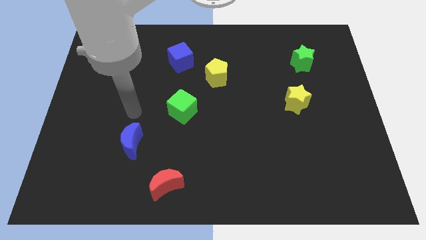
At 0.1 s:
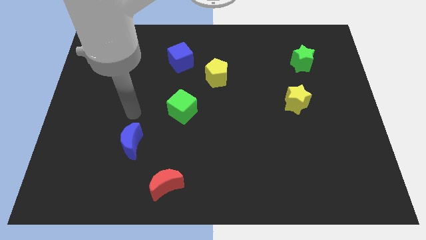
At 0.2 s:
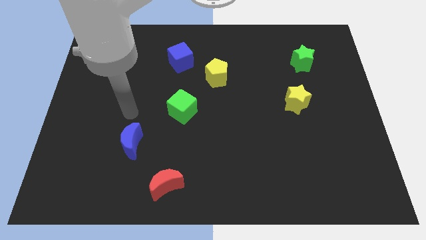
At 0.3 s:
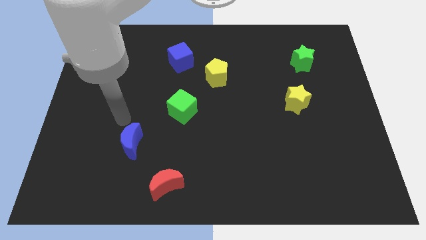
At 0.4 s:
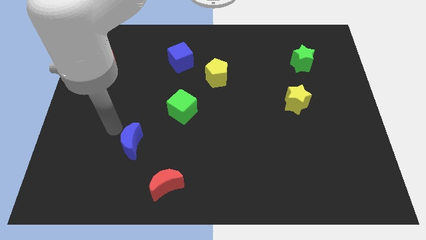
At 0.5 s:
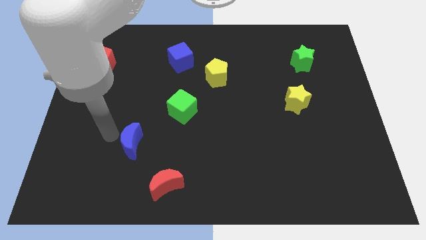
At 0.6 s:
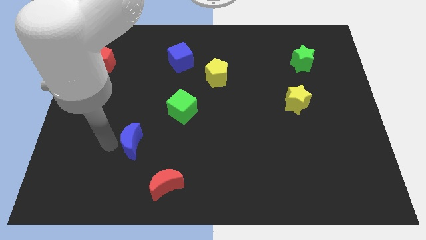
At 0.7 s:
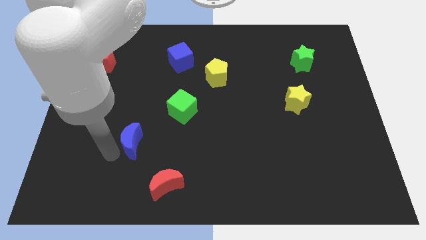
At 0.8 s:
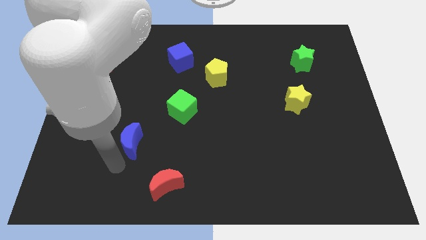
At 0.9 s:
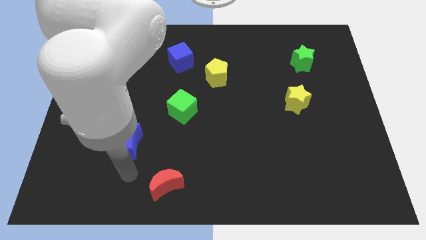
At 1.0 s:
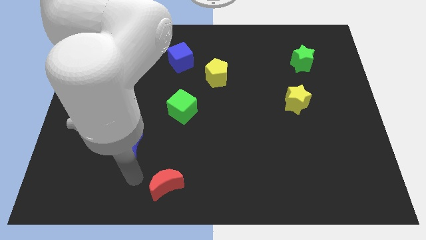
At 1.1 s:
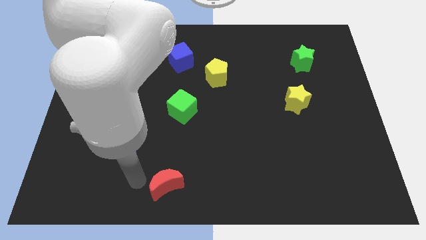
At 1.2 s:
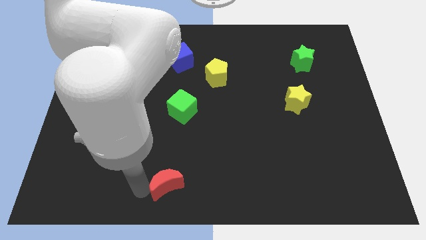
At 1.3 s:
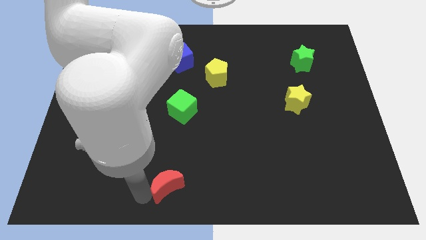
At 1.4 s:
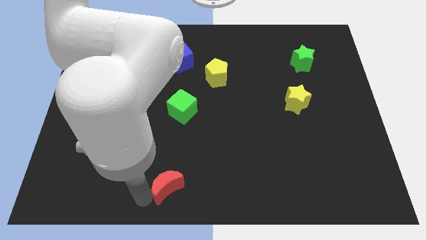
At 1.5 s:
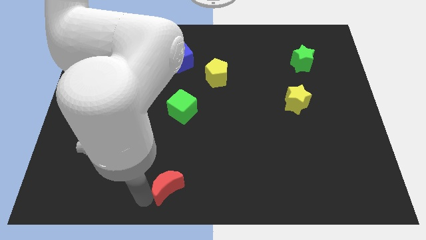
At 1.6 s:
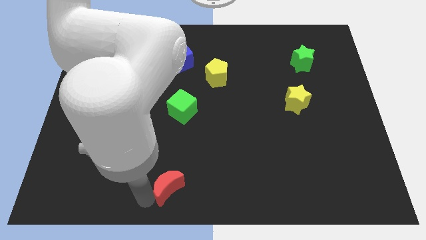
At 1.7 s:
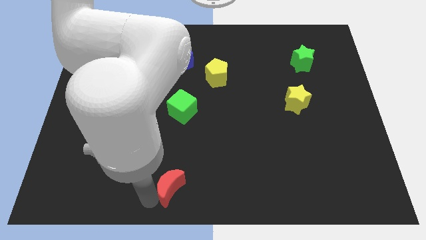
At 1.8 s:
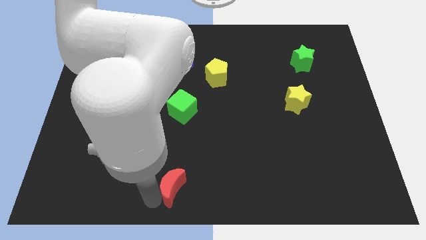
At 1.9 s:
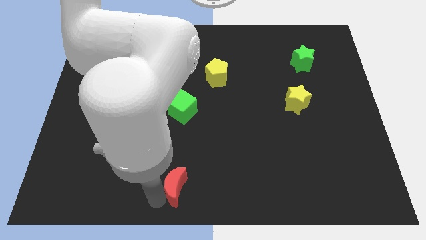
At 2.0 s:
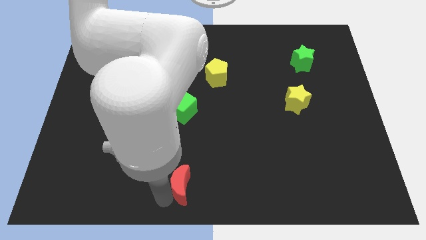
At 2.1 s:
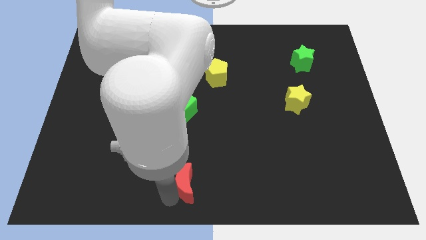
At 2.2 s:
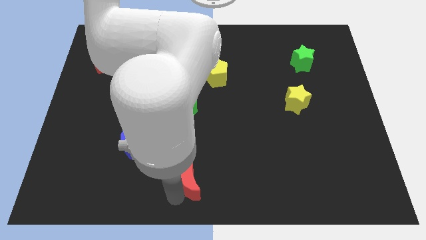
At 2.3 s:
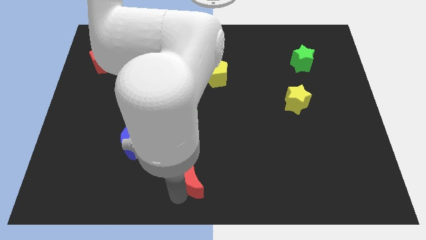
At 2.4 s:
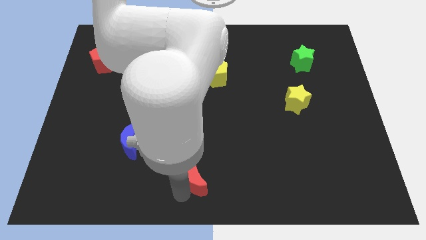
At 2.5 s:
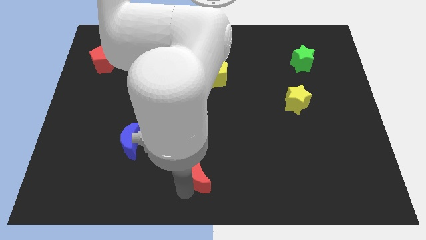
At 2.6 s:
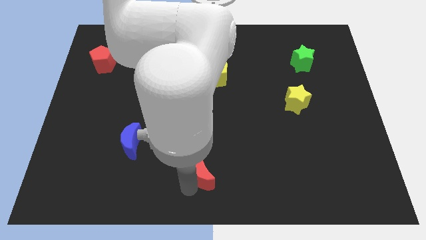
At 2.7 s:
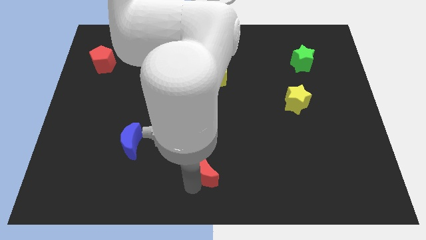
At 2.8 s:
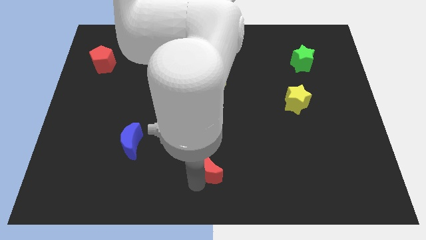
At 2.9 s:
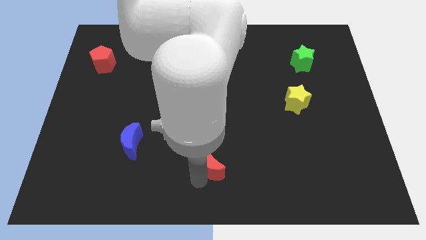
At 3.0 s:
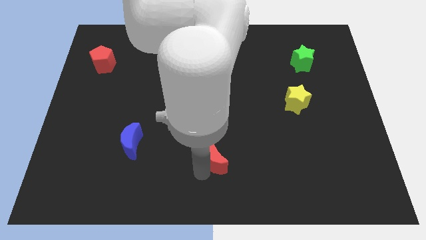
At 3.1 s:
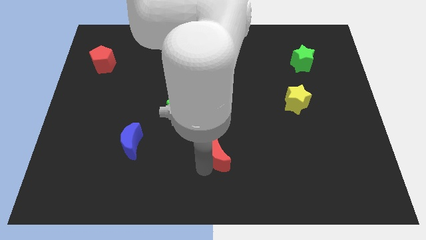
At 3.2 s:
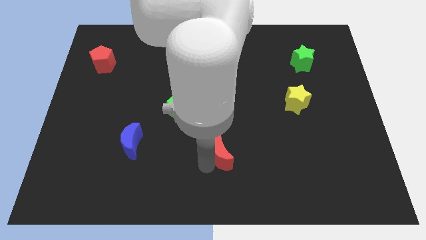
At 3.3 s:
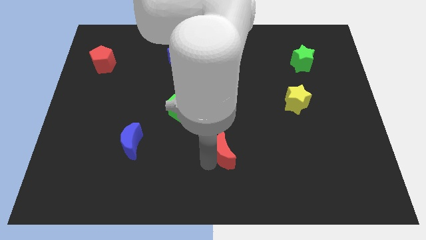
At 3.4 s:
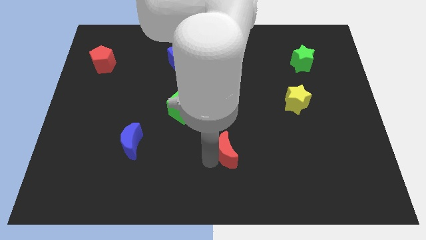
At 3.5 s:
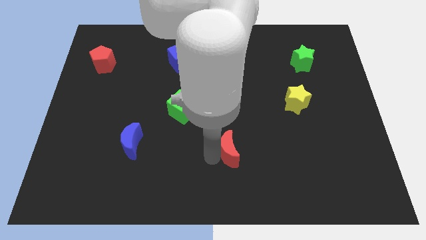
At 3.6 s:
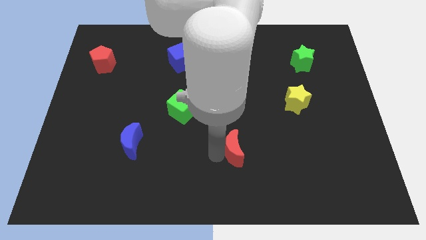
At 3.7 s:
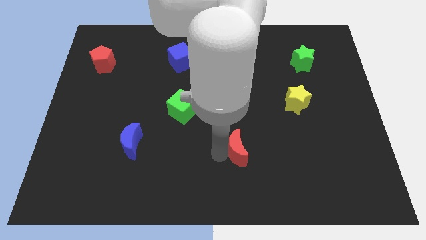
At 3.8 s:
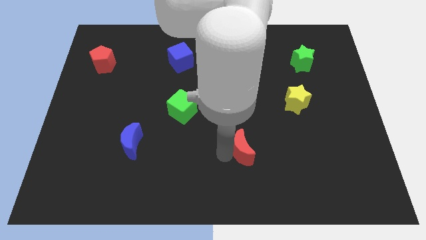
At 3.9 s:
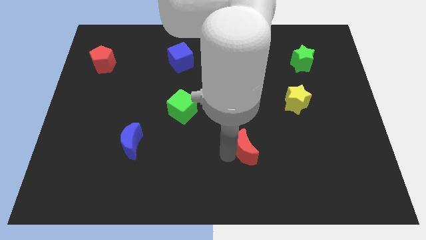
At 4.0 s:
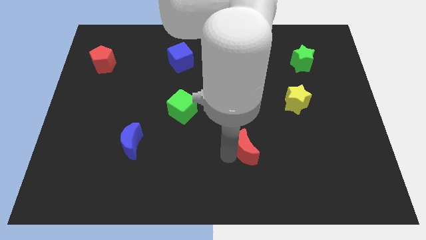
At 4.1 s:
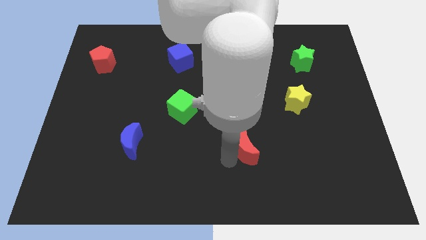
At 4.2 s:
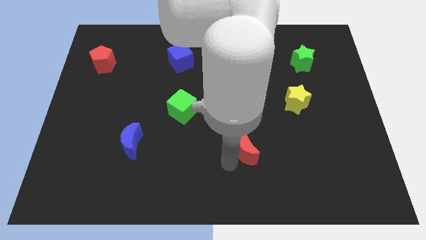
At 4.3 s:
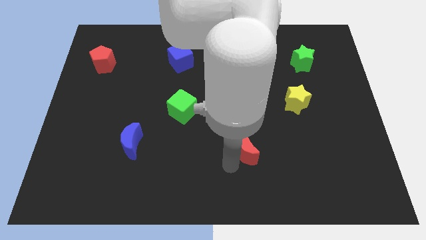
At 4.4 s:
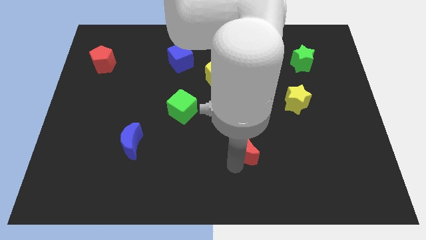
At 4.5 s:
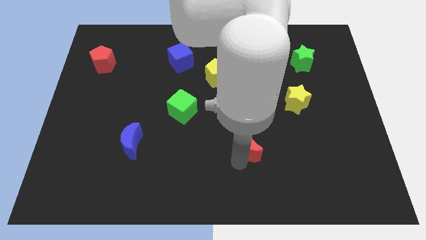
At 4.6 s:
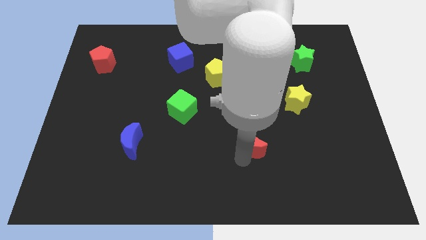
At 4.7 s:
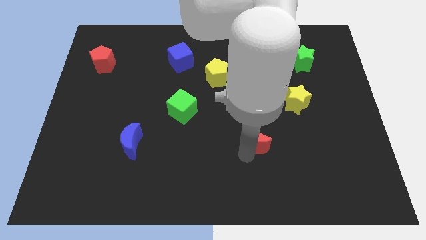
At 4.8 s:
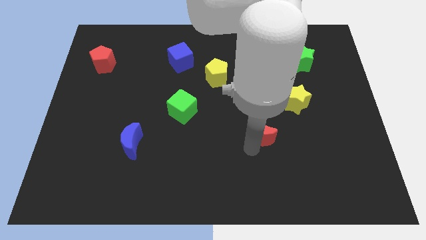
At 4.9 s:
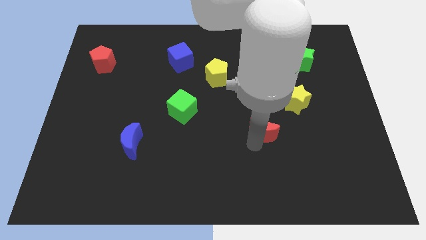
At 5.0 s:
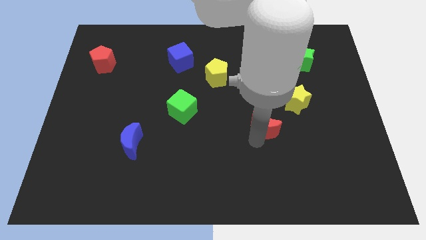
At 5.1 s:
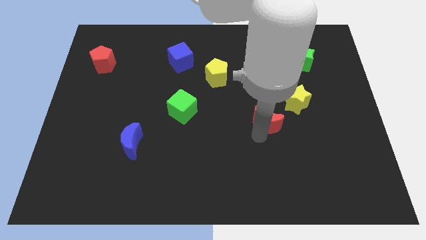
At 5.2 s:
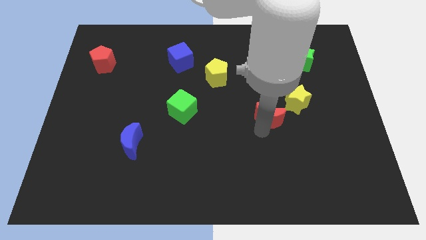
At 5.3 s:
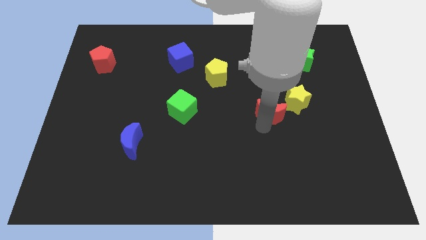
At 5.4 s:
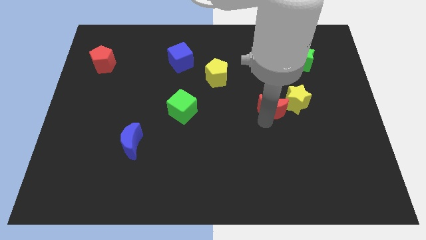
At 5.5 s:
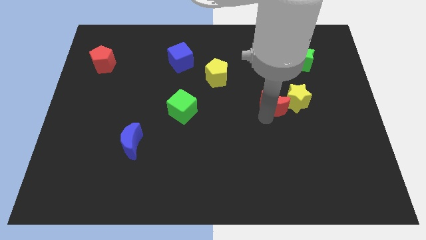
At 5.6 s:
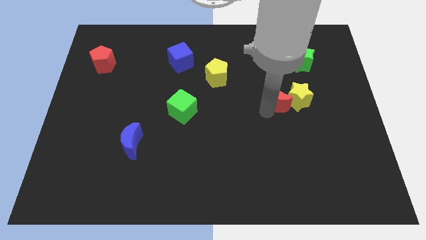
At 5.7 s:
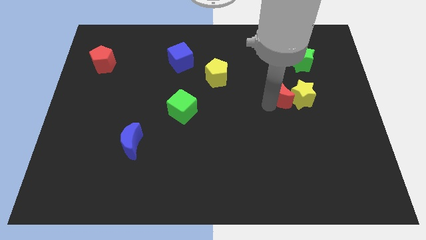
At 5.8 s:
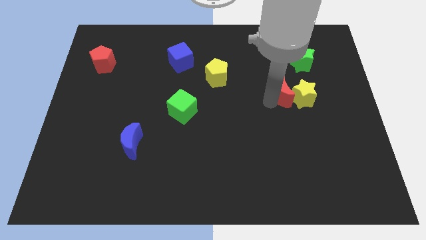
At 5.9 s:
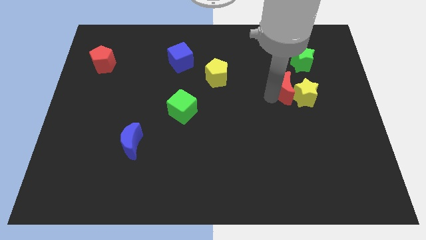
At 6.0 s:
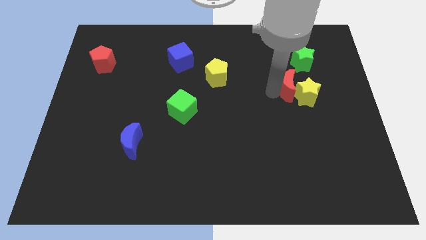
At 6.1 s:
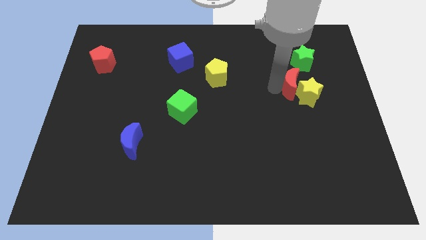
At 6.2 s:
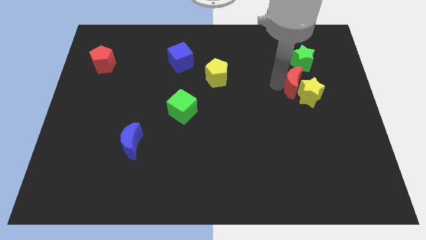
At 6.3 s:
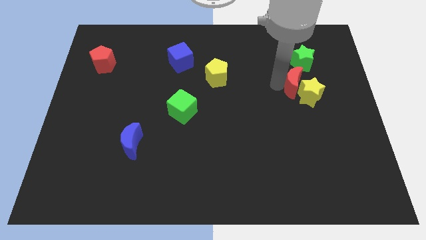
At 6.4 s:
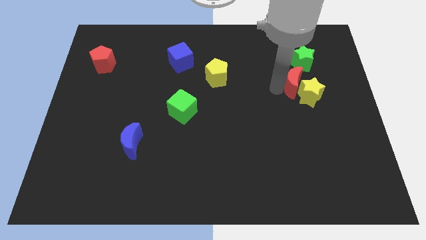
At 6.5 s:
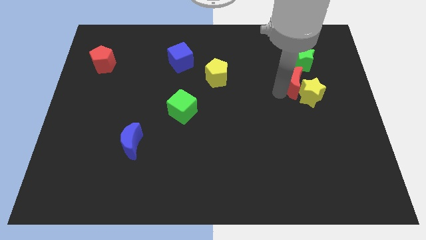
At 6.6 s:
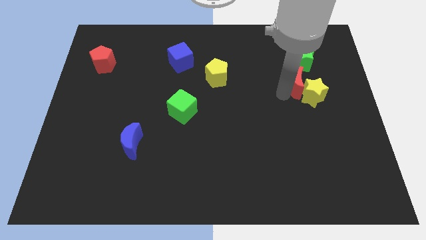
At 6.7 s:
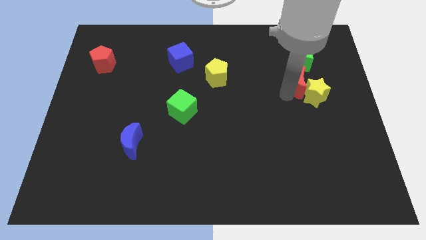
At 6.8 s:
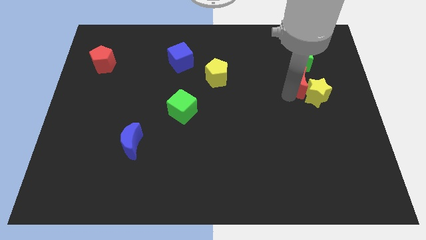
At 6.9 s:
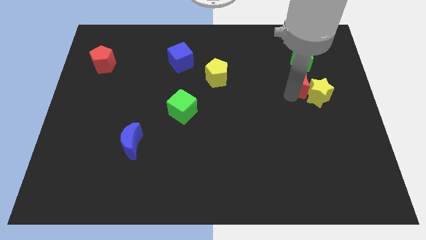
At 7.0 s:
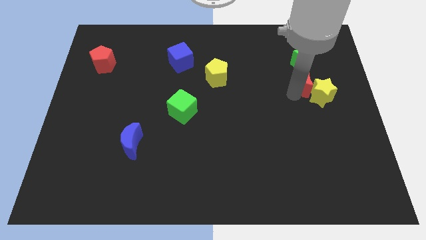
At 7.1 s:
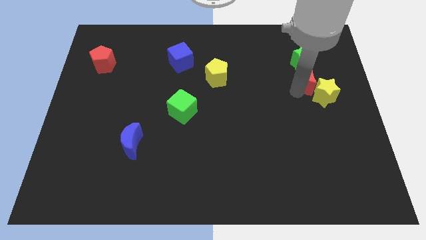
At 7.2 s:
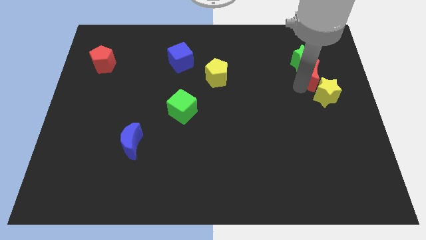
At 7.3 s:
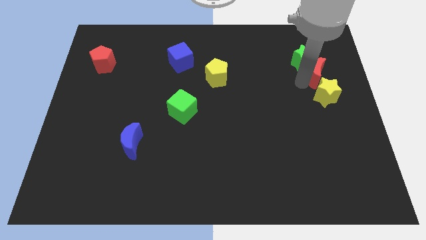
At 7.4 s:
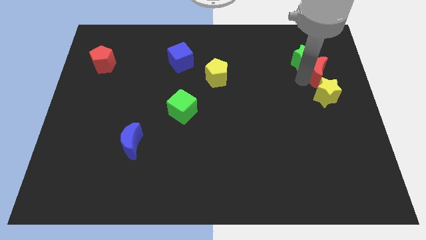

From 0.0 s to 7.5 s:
move the red moon to the green star
